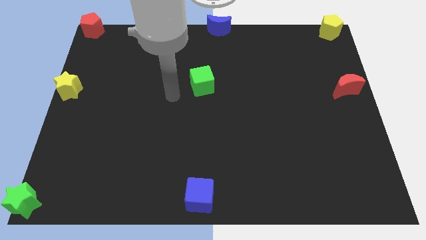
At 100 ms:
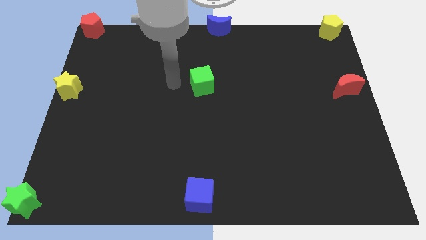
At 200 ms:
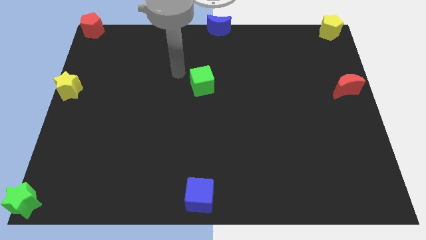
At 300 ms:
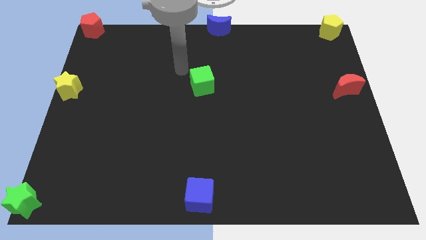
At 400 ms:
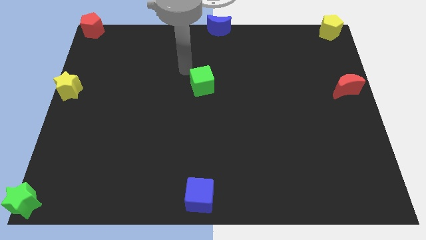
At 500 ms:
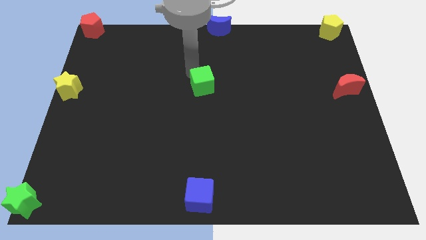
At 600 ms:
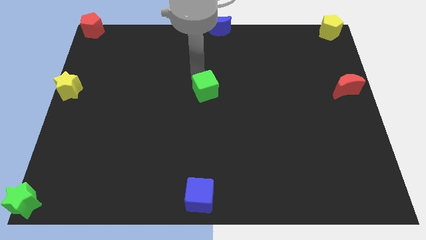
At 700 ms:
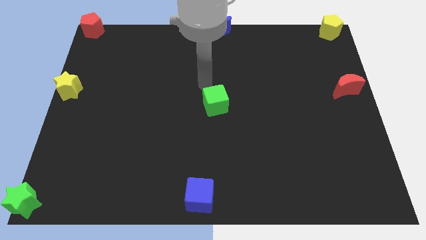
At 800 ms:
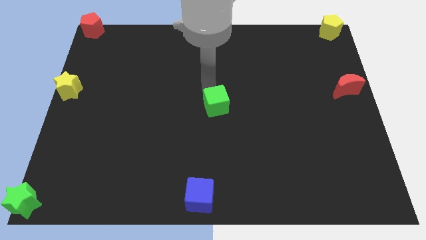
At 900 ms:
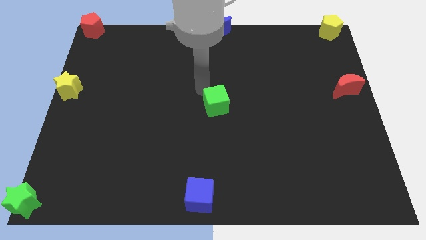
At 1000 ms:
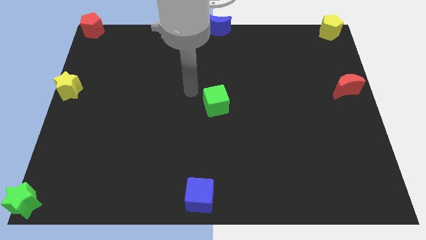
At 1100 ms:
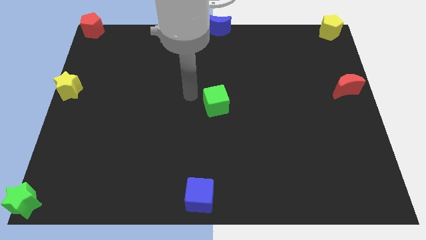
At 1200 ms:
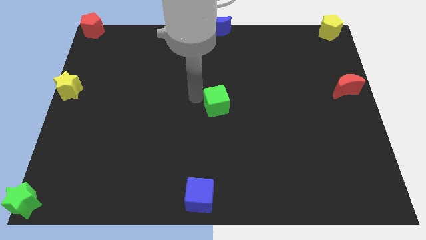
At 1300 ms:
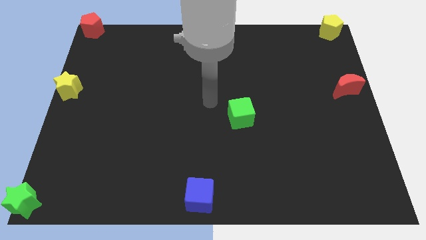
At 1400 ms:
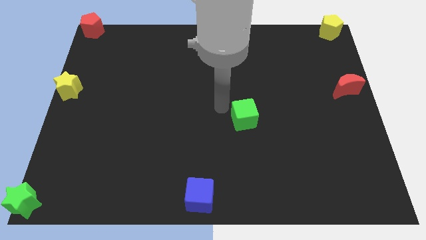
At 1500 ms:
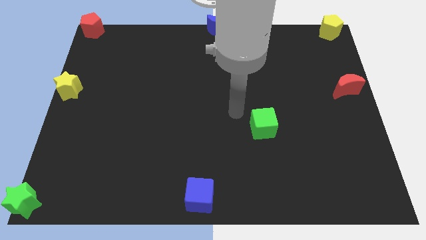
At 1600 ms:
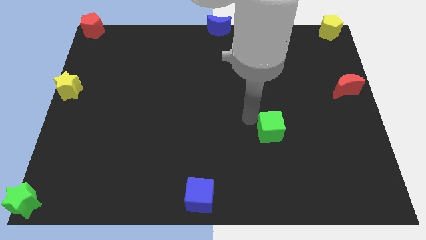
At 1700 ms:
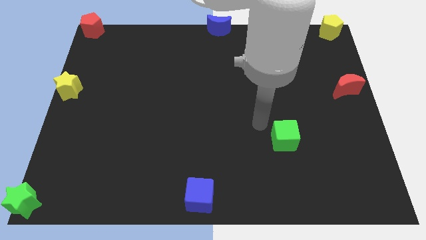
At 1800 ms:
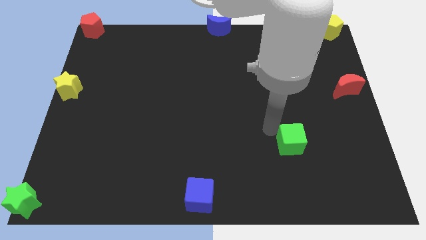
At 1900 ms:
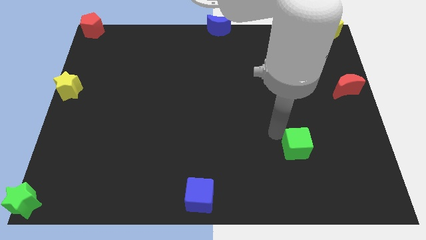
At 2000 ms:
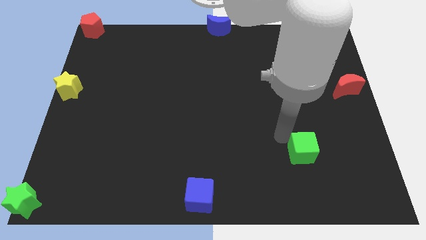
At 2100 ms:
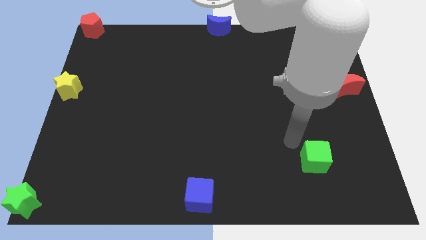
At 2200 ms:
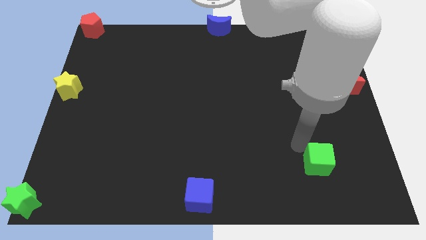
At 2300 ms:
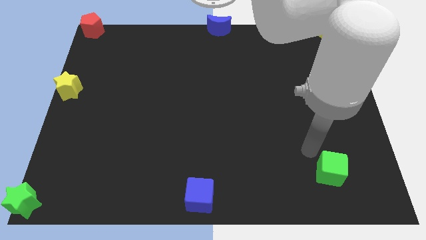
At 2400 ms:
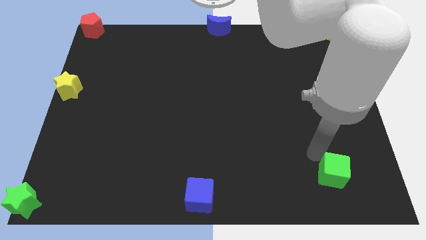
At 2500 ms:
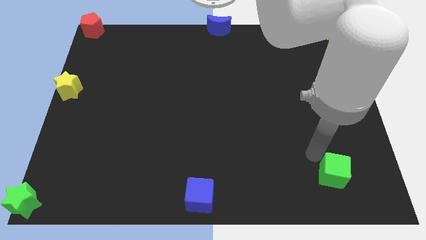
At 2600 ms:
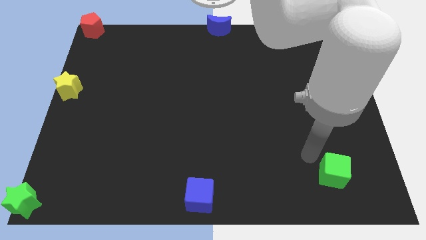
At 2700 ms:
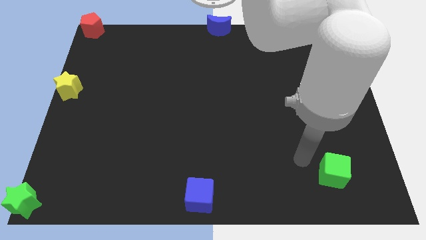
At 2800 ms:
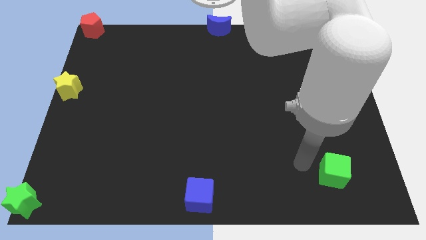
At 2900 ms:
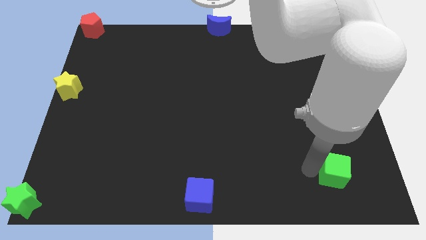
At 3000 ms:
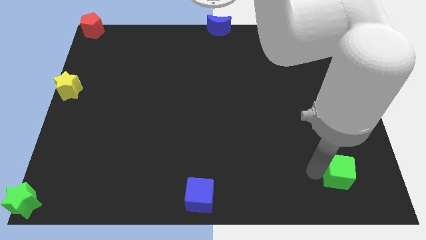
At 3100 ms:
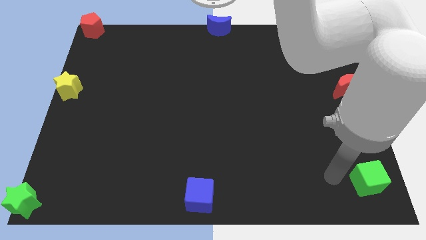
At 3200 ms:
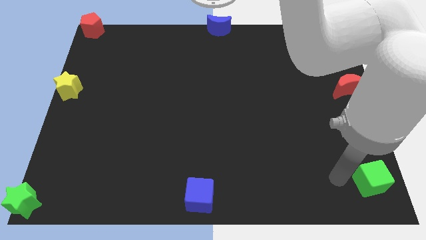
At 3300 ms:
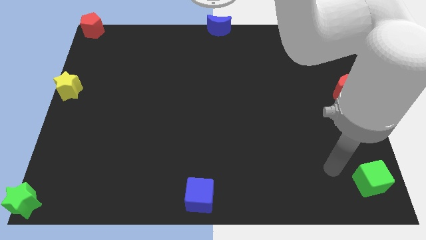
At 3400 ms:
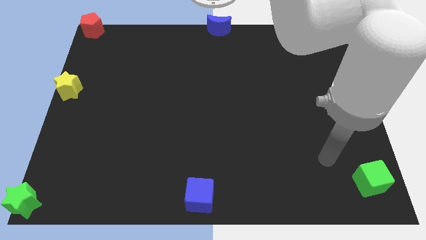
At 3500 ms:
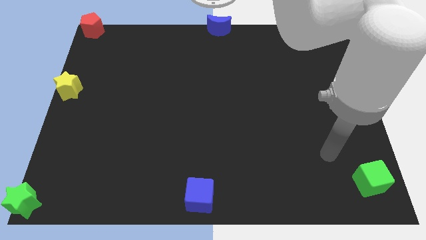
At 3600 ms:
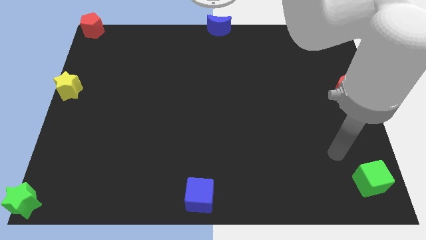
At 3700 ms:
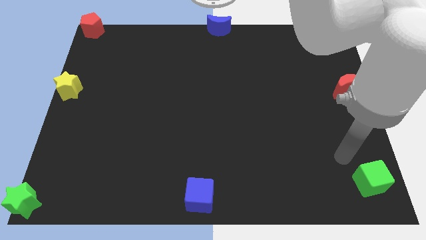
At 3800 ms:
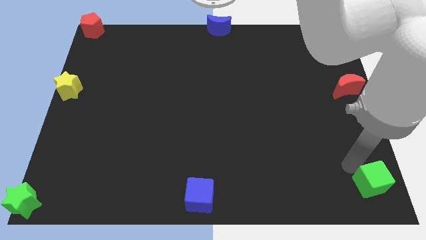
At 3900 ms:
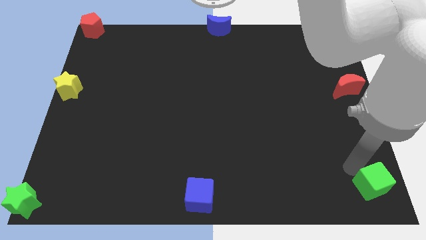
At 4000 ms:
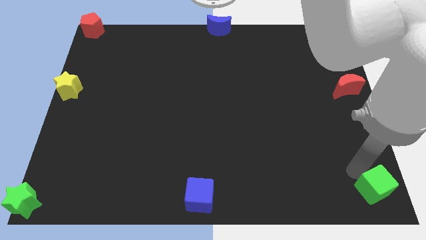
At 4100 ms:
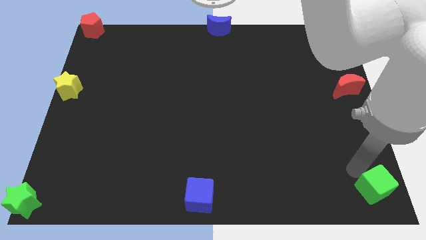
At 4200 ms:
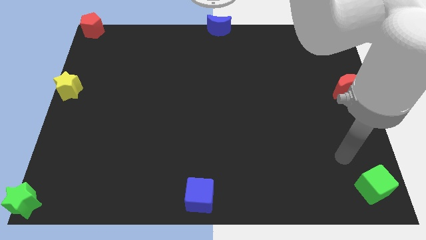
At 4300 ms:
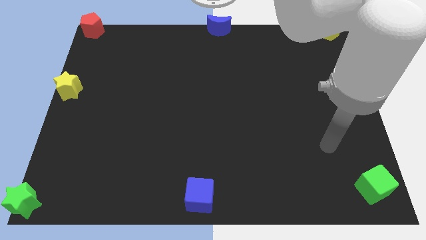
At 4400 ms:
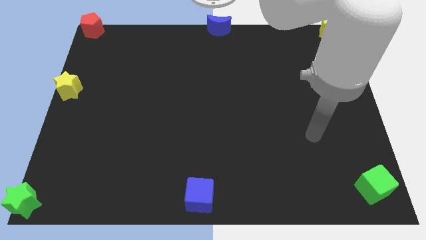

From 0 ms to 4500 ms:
move the green cube towards the bottom right corner of the board

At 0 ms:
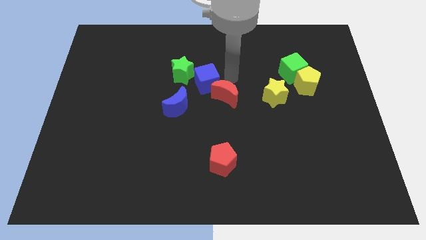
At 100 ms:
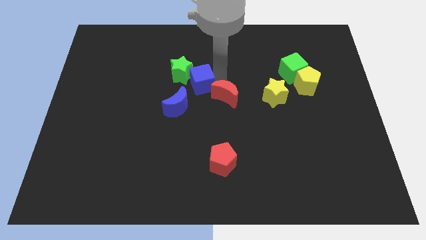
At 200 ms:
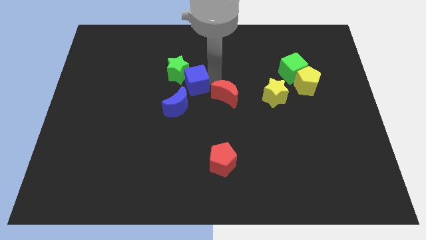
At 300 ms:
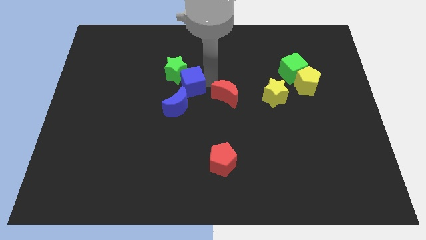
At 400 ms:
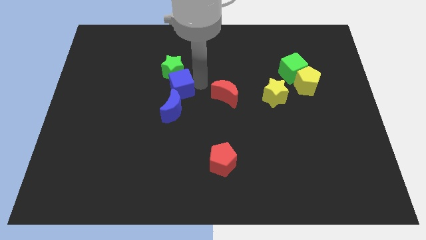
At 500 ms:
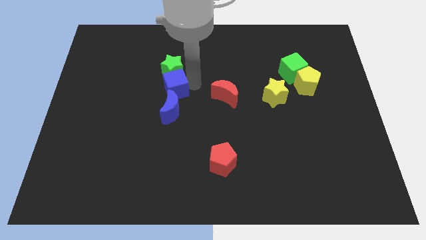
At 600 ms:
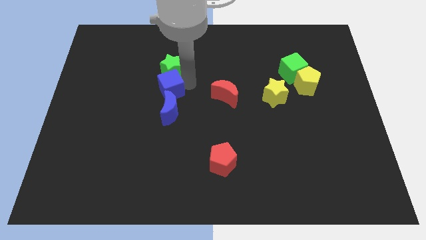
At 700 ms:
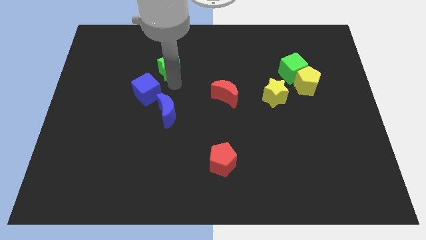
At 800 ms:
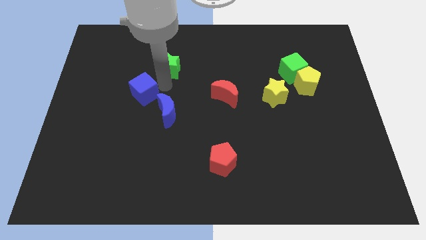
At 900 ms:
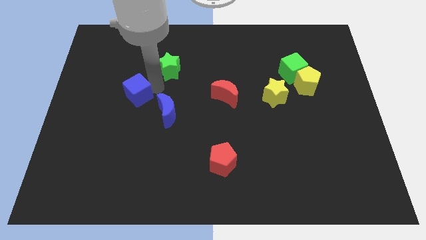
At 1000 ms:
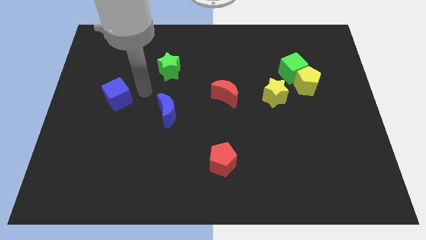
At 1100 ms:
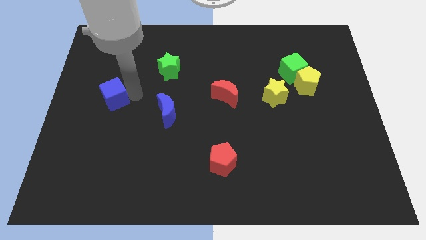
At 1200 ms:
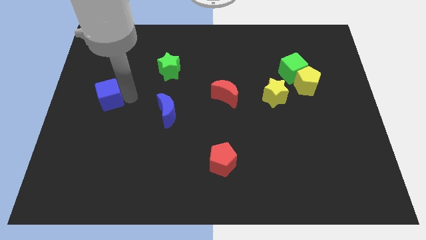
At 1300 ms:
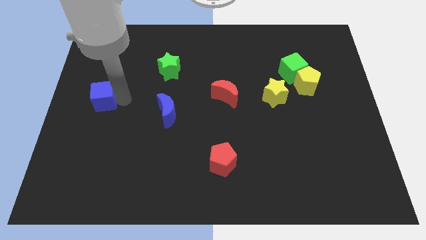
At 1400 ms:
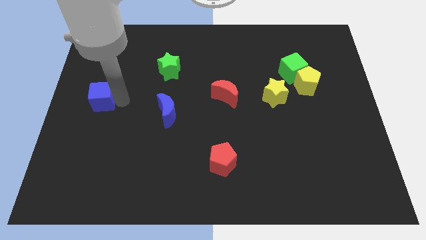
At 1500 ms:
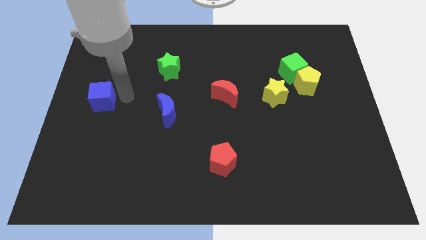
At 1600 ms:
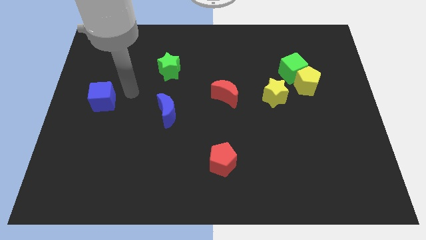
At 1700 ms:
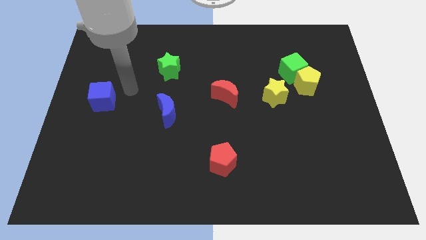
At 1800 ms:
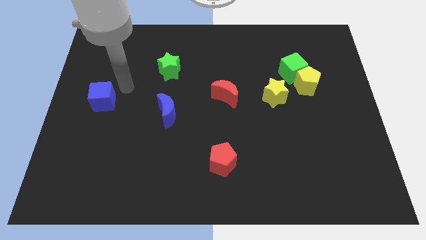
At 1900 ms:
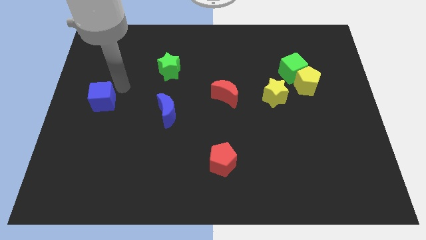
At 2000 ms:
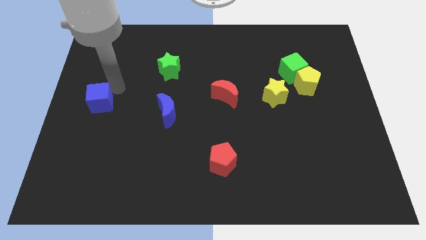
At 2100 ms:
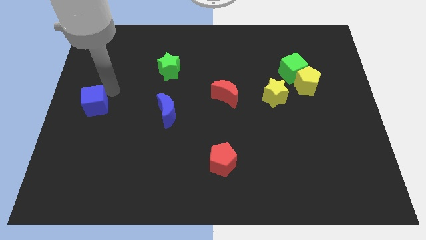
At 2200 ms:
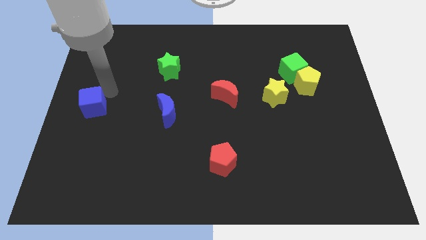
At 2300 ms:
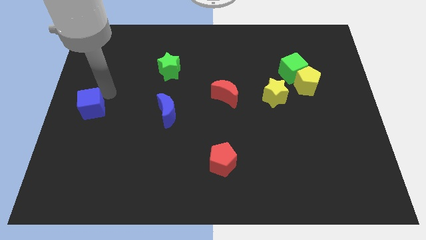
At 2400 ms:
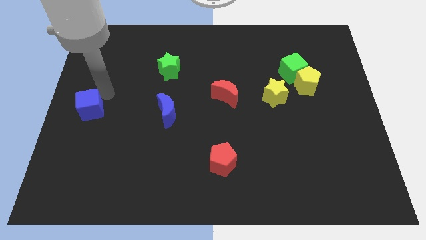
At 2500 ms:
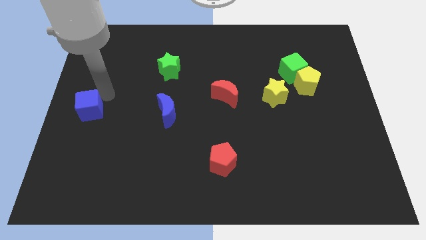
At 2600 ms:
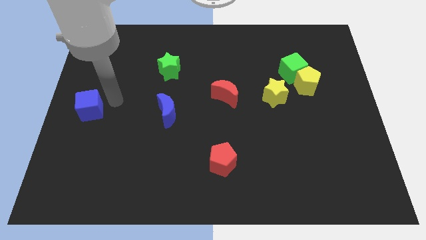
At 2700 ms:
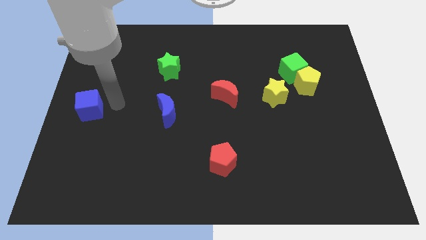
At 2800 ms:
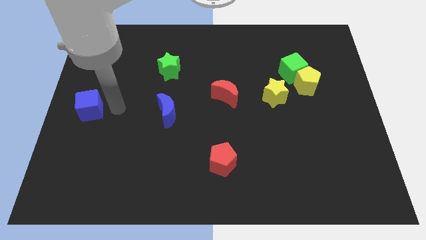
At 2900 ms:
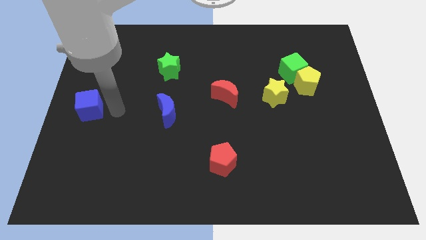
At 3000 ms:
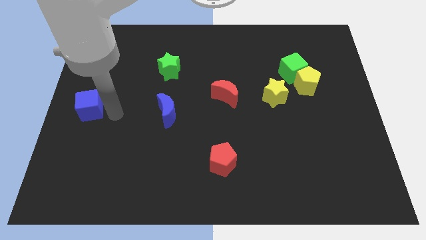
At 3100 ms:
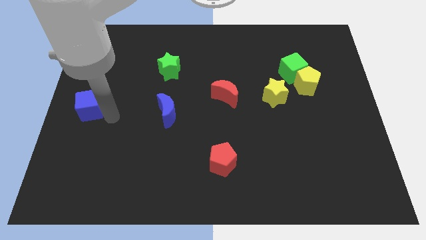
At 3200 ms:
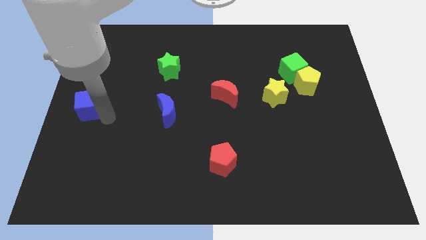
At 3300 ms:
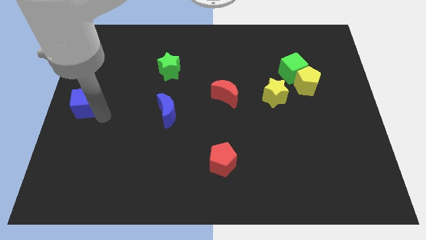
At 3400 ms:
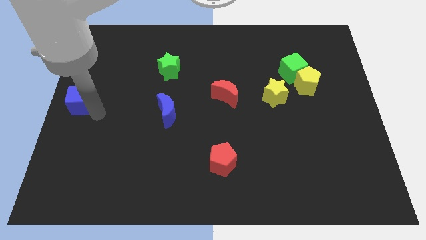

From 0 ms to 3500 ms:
separate blue cube from the green star and blue moon

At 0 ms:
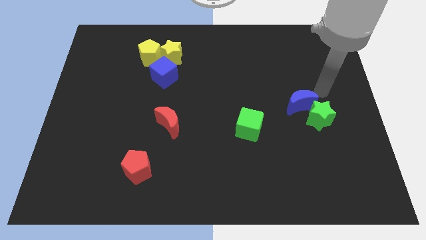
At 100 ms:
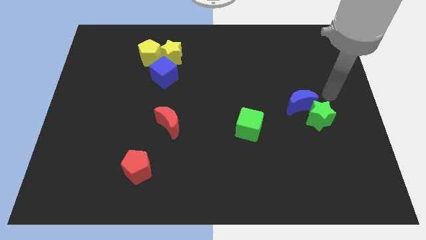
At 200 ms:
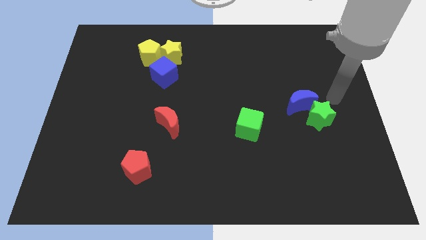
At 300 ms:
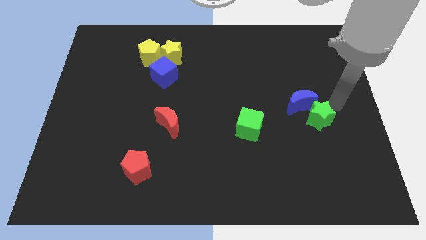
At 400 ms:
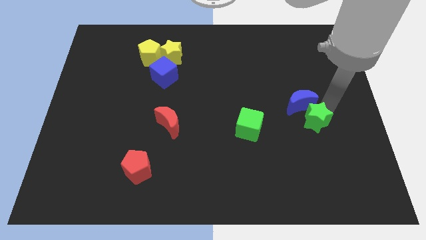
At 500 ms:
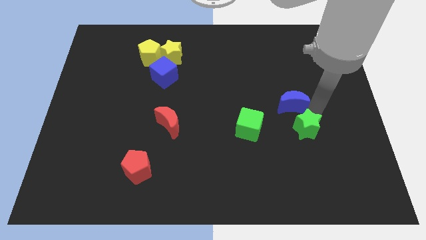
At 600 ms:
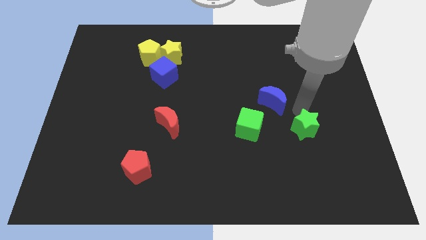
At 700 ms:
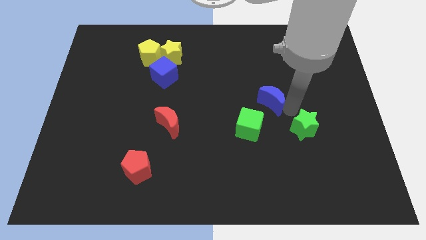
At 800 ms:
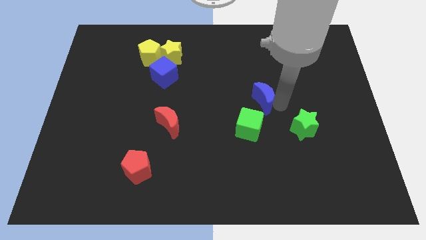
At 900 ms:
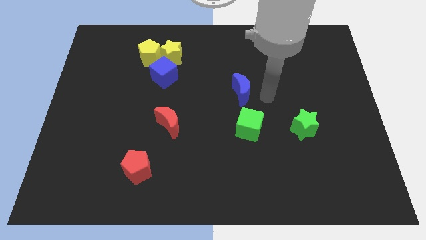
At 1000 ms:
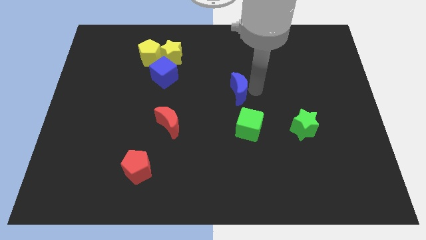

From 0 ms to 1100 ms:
move the blue moon to the top of the green cube
